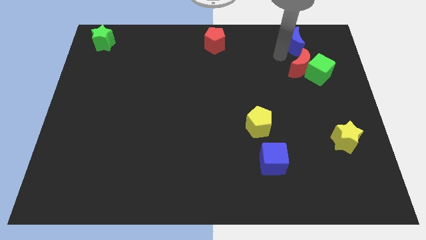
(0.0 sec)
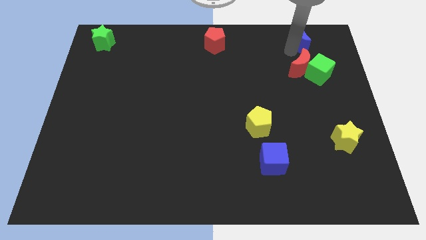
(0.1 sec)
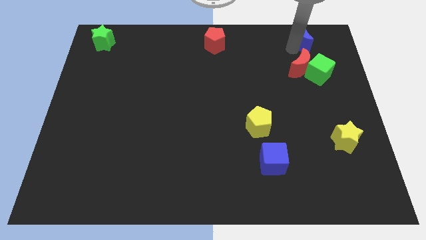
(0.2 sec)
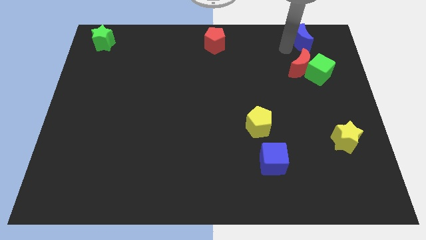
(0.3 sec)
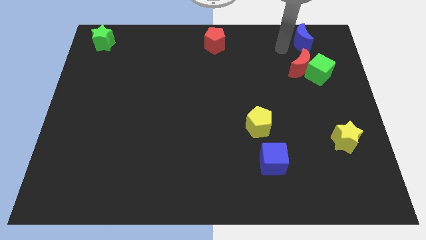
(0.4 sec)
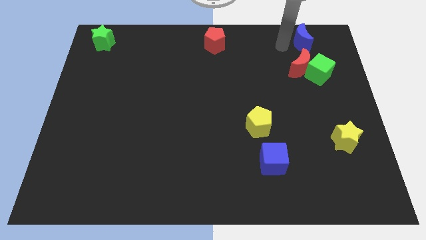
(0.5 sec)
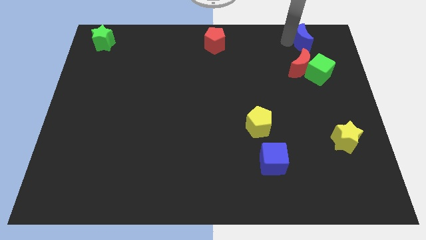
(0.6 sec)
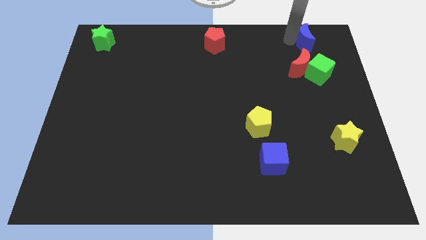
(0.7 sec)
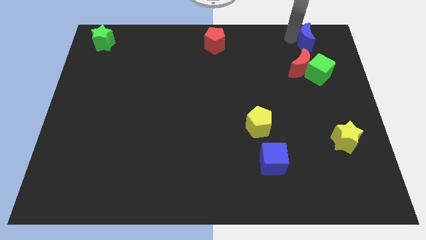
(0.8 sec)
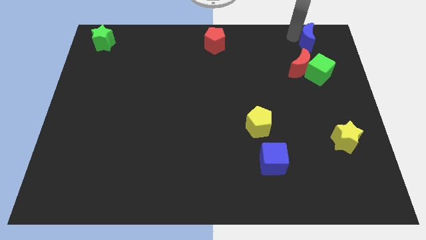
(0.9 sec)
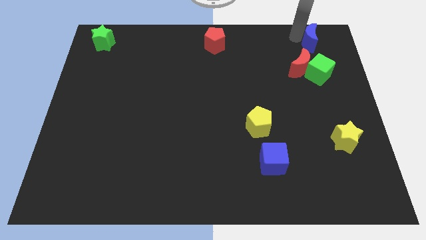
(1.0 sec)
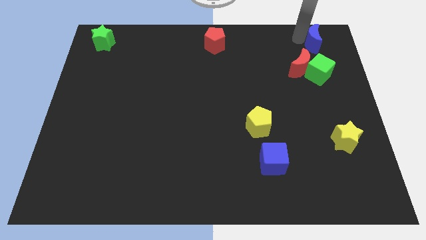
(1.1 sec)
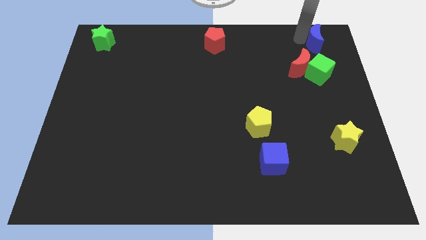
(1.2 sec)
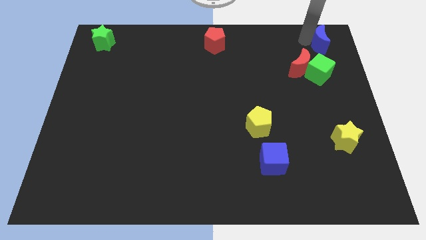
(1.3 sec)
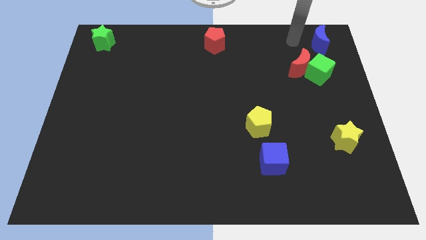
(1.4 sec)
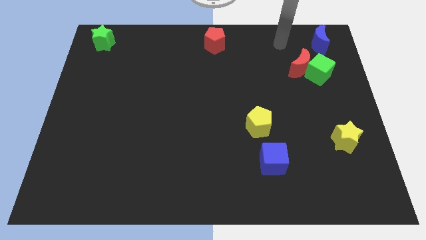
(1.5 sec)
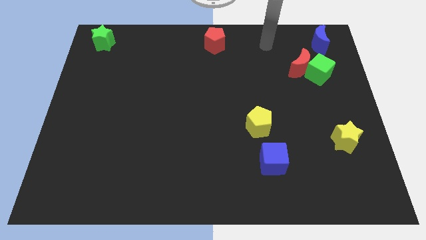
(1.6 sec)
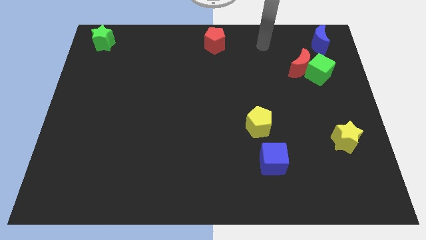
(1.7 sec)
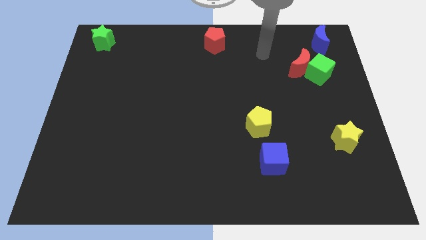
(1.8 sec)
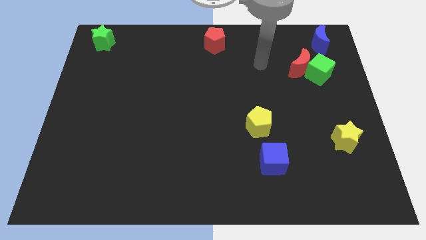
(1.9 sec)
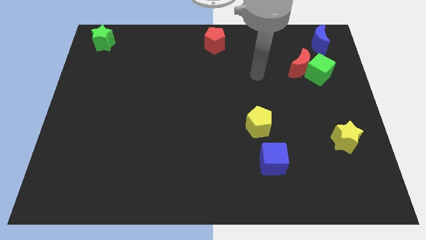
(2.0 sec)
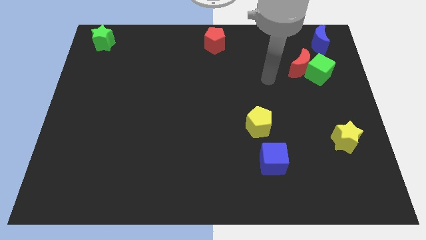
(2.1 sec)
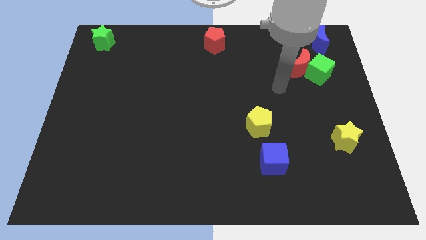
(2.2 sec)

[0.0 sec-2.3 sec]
move the blue crescent to the top right side of the board

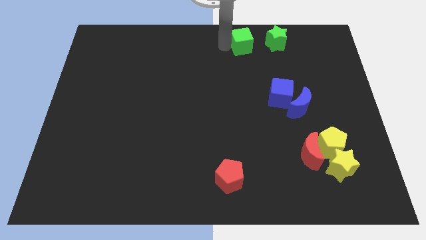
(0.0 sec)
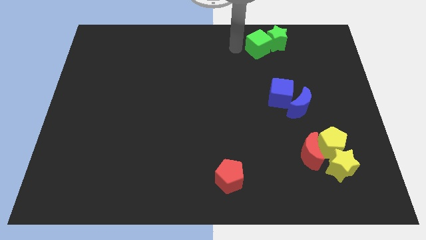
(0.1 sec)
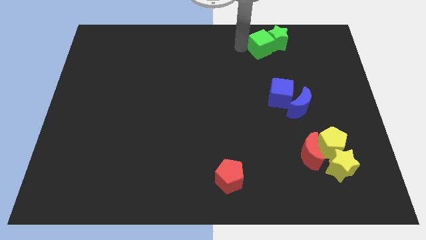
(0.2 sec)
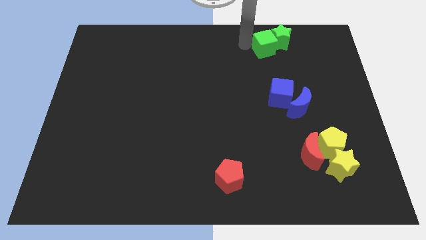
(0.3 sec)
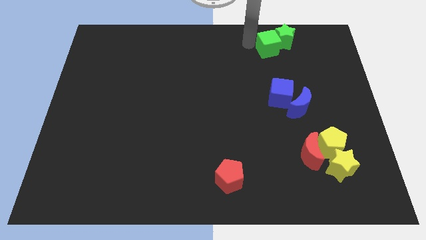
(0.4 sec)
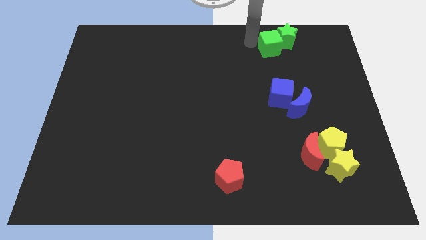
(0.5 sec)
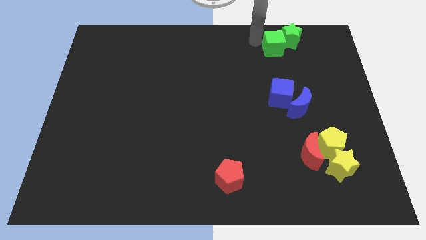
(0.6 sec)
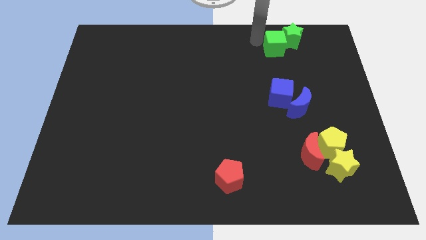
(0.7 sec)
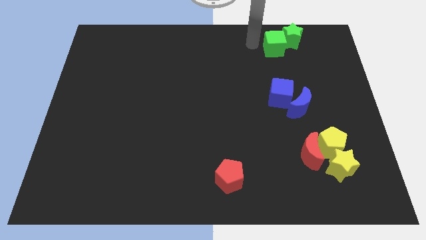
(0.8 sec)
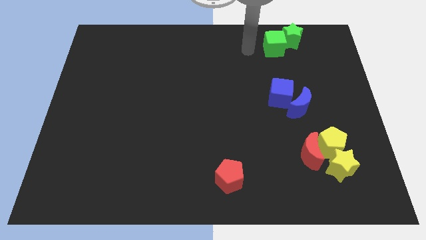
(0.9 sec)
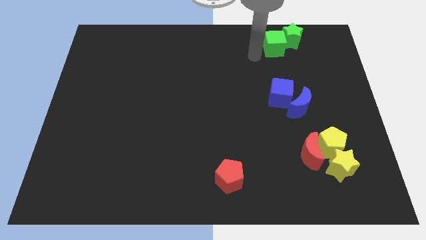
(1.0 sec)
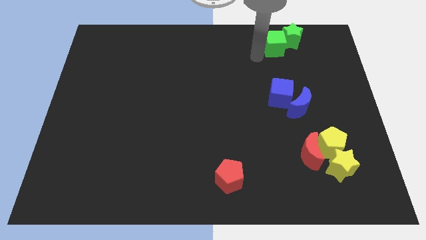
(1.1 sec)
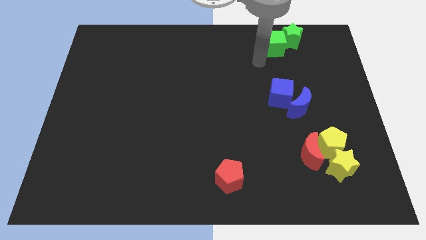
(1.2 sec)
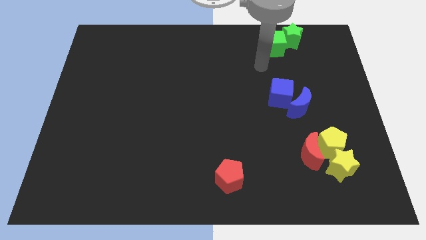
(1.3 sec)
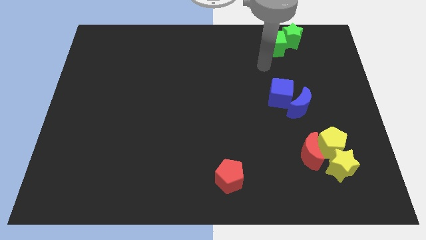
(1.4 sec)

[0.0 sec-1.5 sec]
push the green cube into the green star

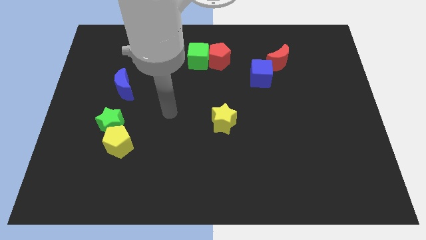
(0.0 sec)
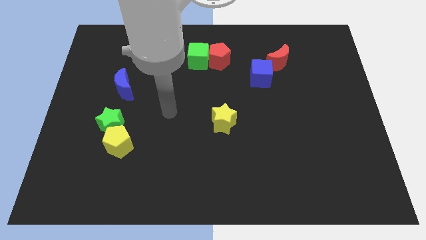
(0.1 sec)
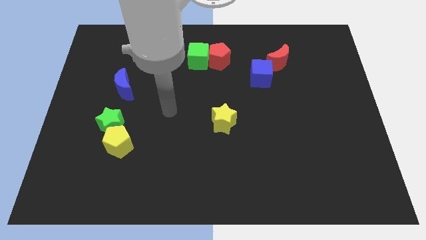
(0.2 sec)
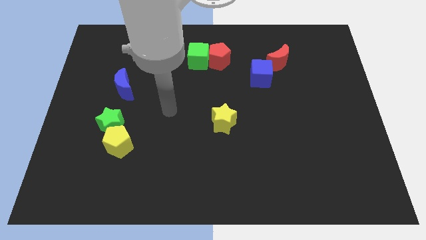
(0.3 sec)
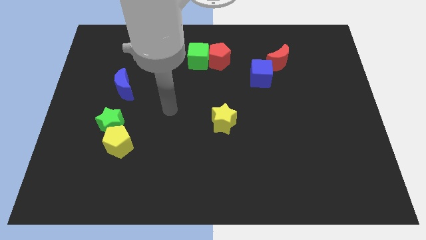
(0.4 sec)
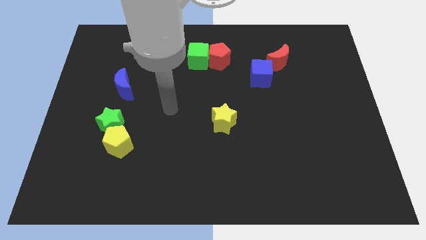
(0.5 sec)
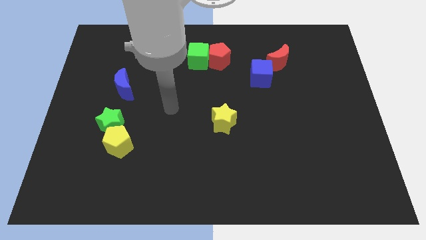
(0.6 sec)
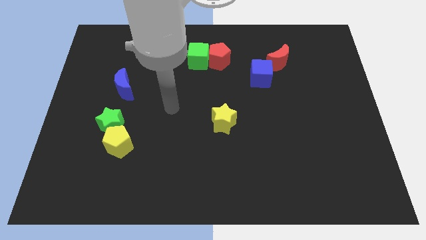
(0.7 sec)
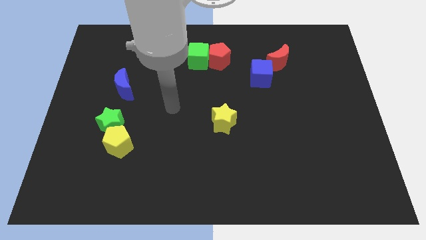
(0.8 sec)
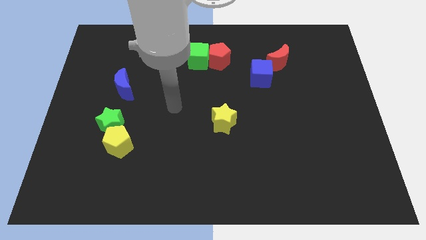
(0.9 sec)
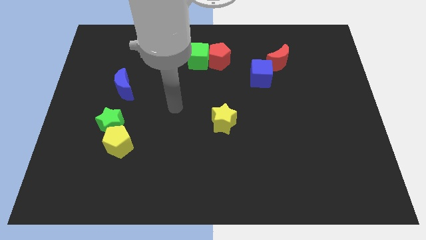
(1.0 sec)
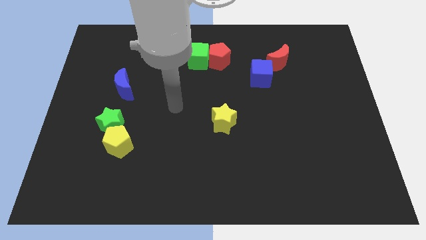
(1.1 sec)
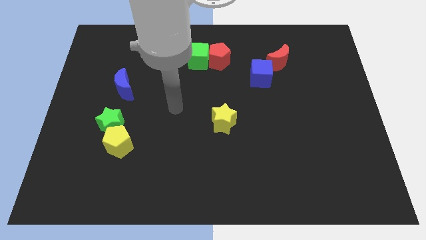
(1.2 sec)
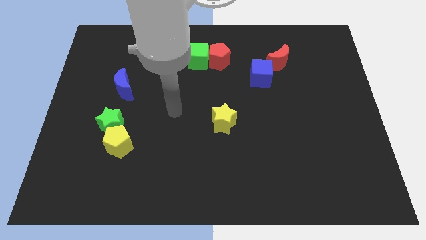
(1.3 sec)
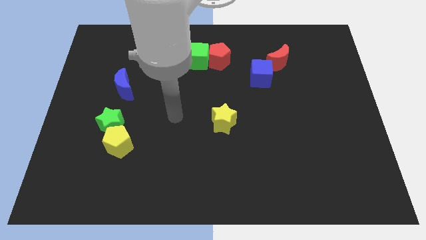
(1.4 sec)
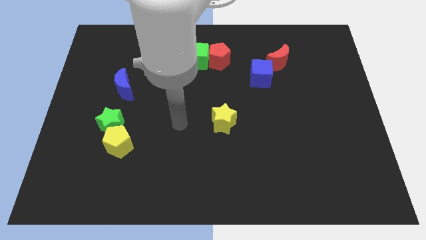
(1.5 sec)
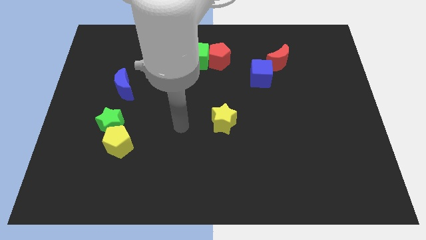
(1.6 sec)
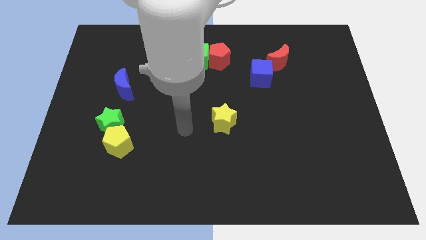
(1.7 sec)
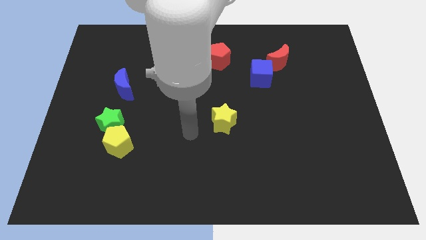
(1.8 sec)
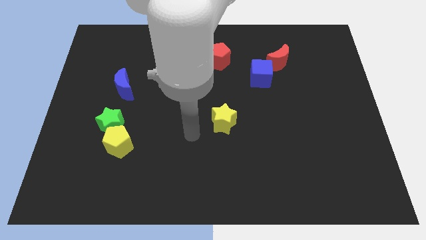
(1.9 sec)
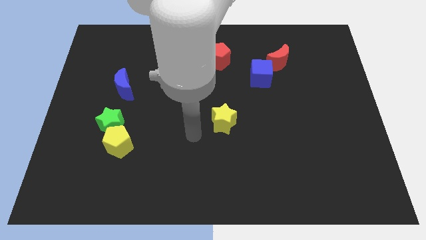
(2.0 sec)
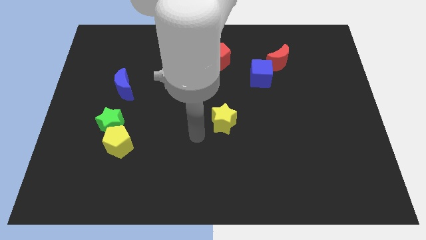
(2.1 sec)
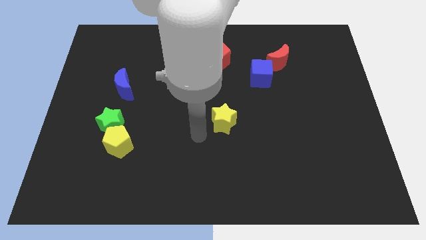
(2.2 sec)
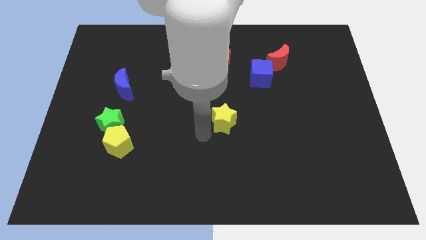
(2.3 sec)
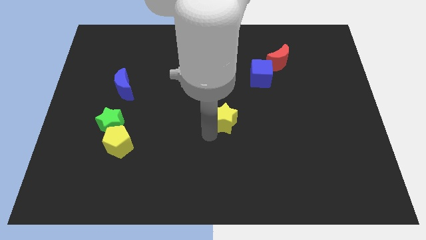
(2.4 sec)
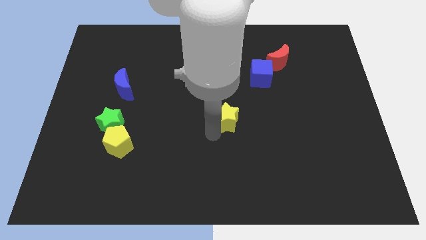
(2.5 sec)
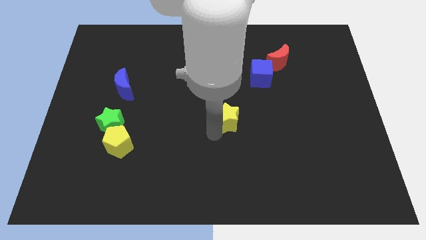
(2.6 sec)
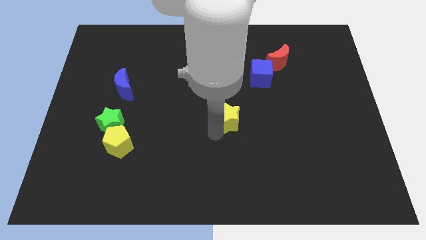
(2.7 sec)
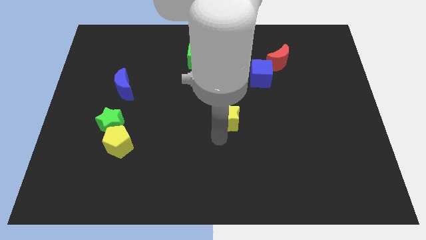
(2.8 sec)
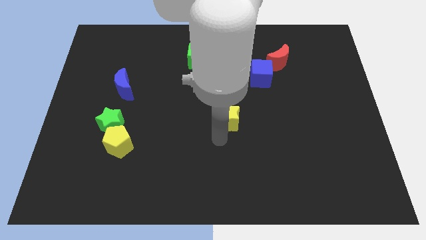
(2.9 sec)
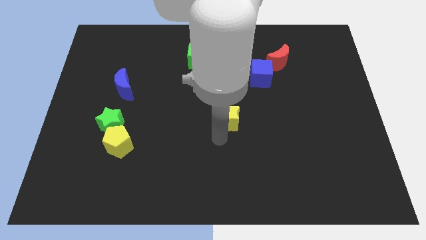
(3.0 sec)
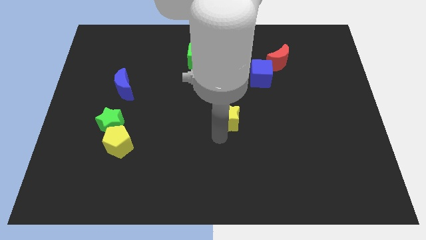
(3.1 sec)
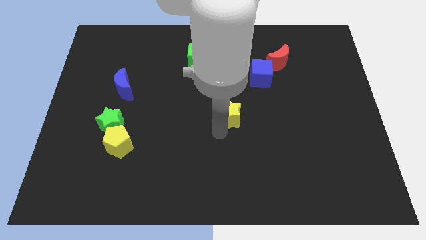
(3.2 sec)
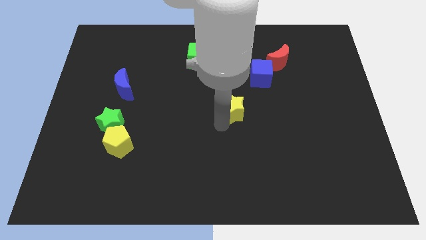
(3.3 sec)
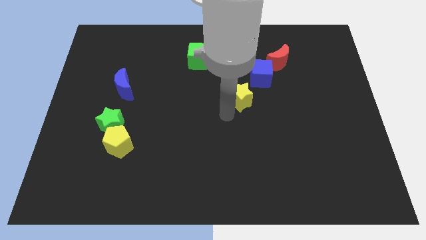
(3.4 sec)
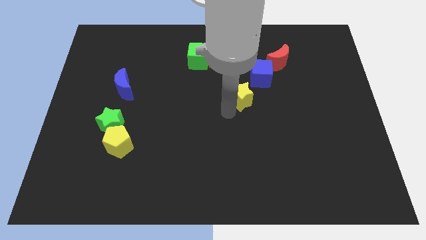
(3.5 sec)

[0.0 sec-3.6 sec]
move the yellow star towards the blue cube

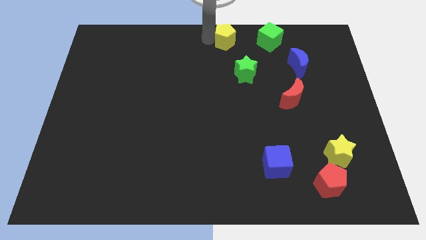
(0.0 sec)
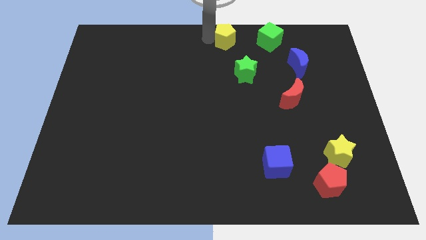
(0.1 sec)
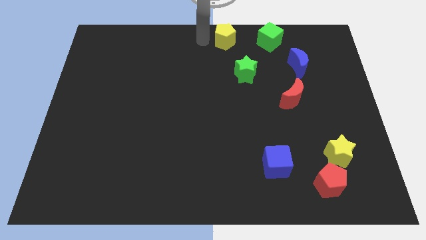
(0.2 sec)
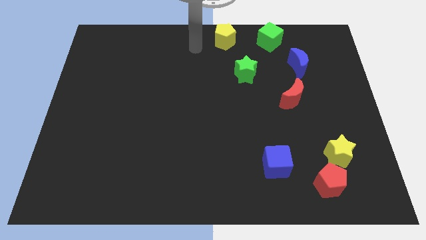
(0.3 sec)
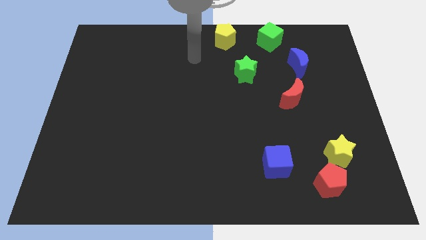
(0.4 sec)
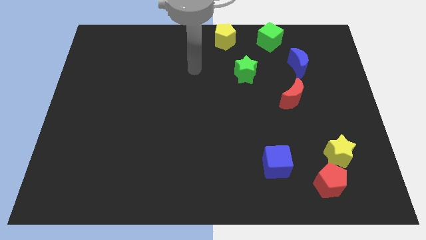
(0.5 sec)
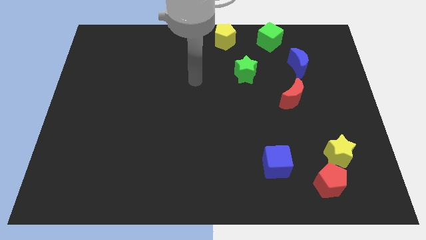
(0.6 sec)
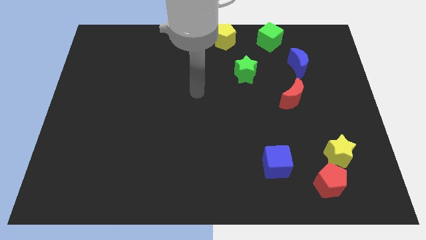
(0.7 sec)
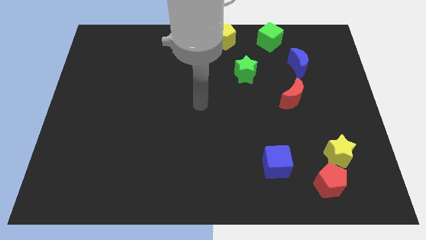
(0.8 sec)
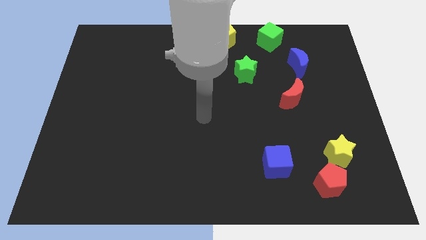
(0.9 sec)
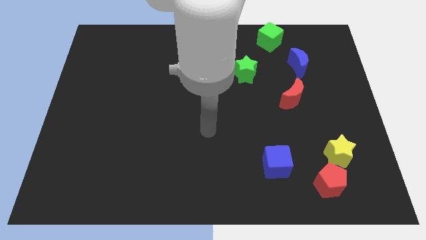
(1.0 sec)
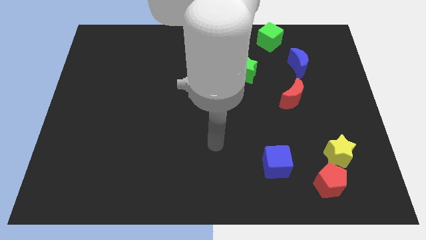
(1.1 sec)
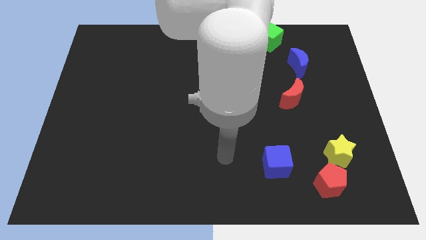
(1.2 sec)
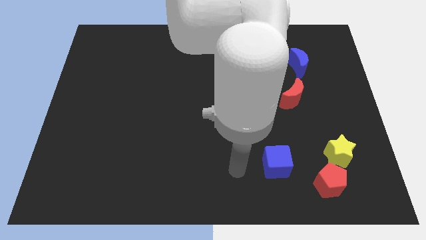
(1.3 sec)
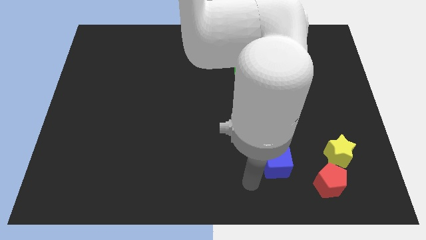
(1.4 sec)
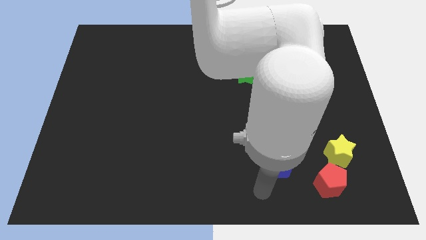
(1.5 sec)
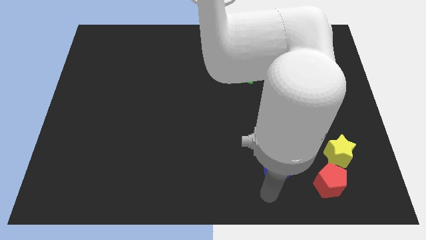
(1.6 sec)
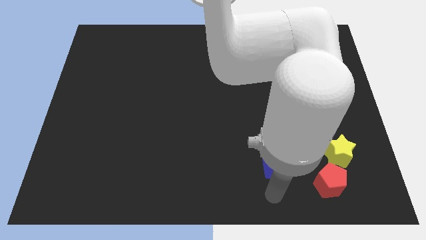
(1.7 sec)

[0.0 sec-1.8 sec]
move your arm towards the blue cube
